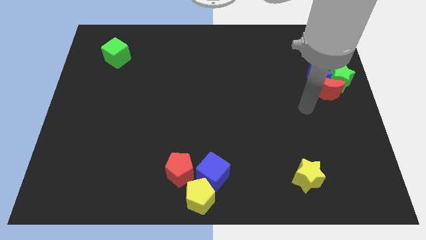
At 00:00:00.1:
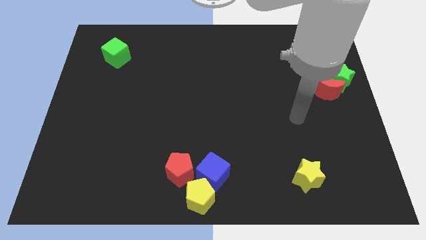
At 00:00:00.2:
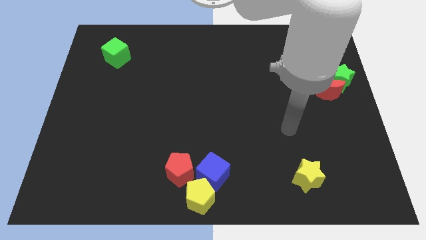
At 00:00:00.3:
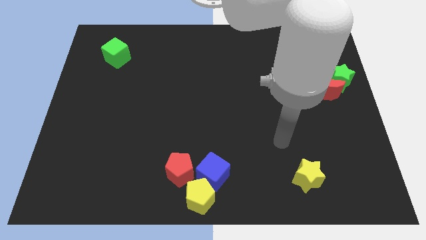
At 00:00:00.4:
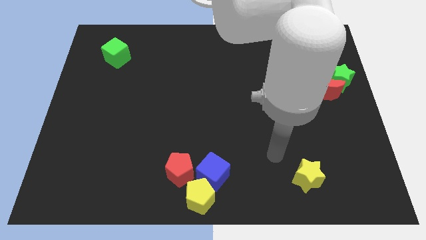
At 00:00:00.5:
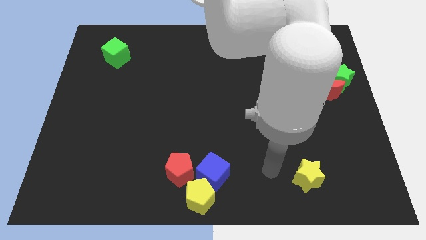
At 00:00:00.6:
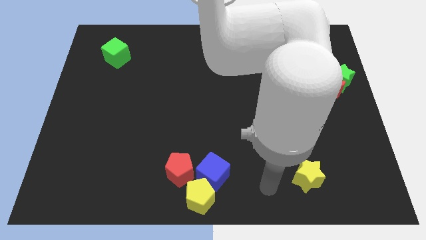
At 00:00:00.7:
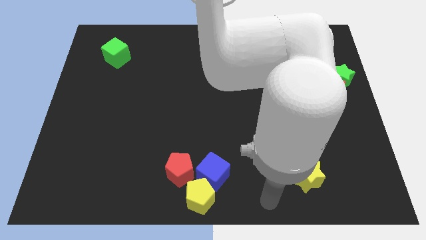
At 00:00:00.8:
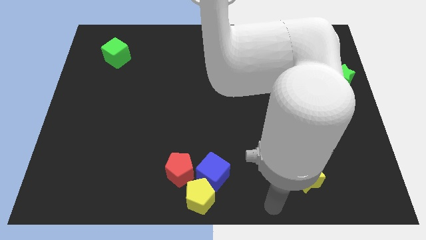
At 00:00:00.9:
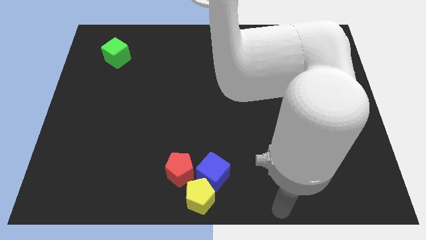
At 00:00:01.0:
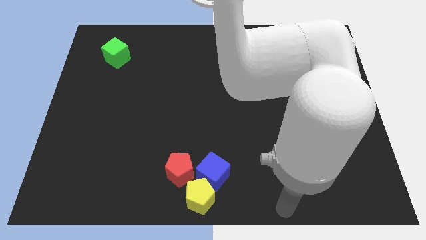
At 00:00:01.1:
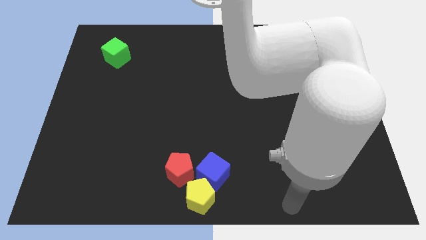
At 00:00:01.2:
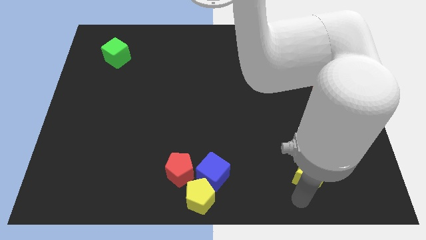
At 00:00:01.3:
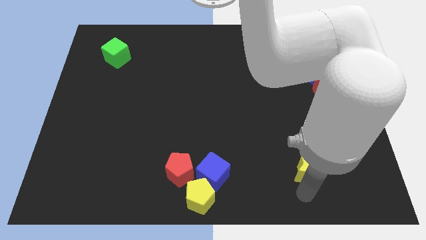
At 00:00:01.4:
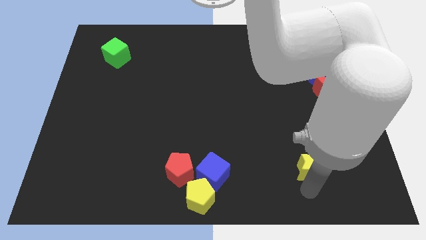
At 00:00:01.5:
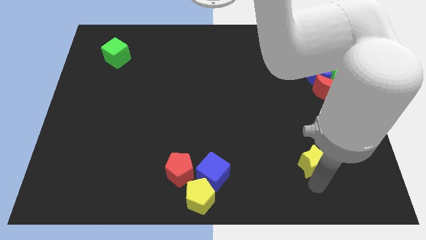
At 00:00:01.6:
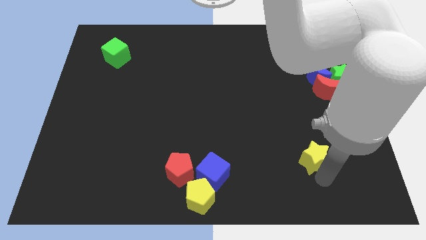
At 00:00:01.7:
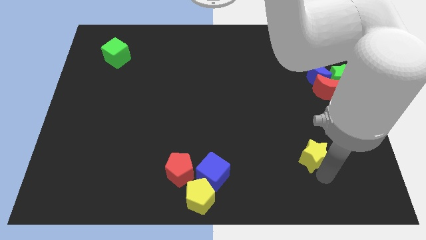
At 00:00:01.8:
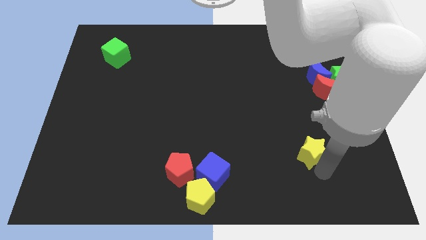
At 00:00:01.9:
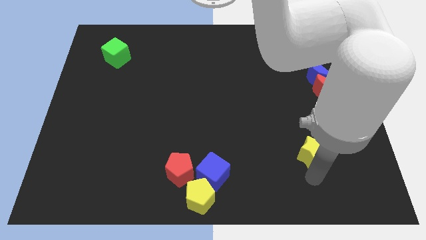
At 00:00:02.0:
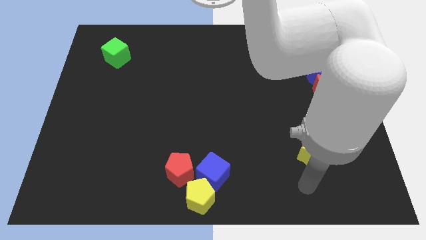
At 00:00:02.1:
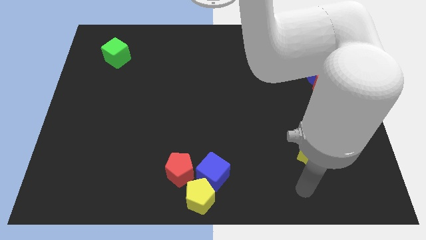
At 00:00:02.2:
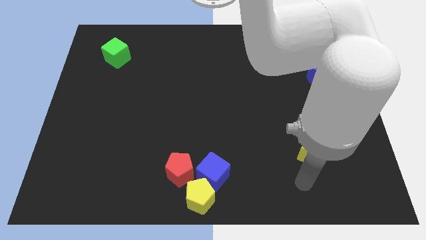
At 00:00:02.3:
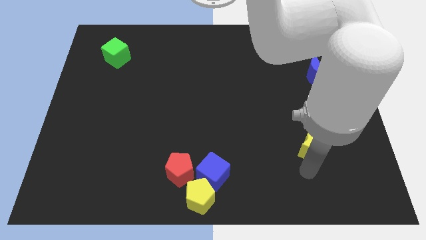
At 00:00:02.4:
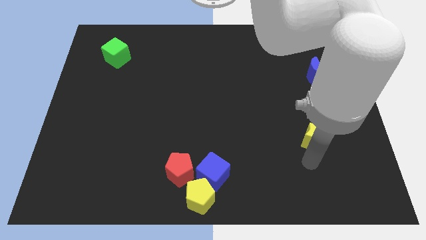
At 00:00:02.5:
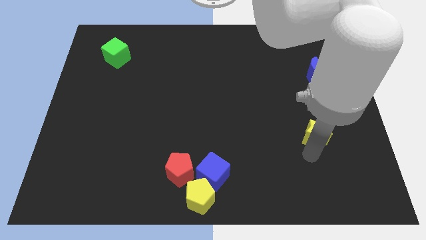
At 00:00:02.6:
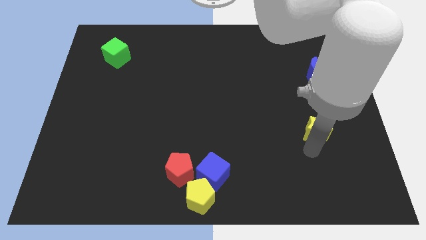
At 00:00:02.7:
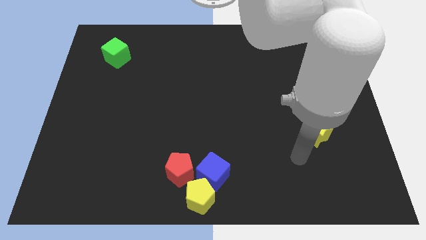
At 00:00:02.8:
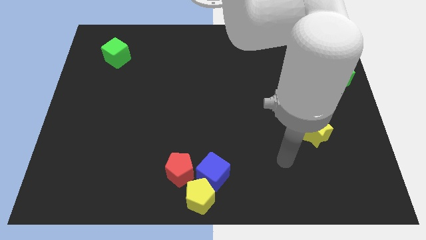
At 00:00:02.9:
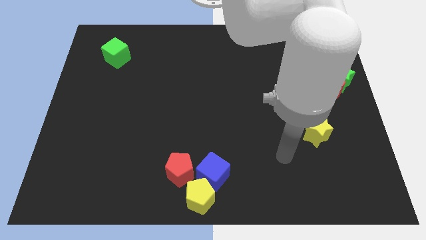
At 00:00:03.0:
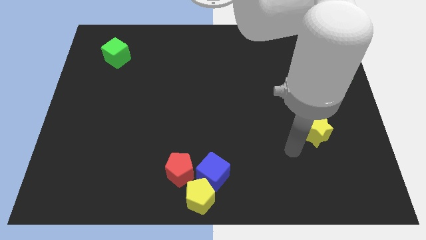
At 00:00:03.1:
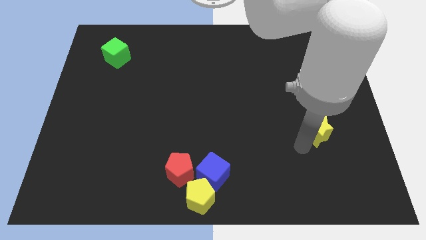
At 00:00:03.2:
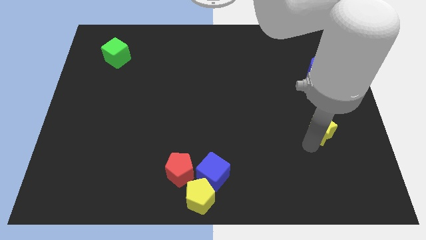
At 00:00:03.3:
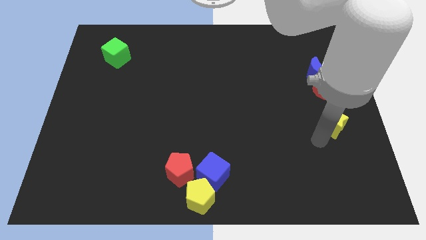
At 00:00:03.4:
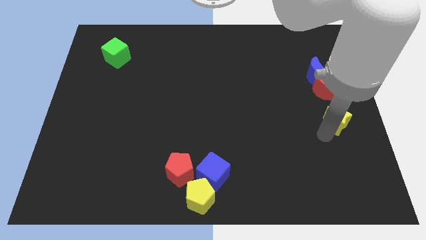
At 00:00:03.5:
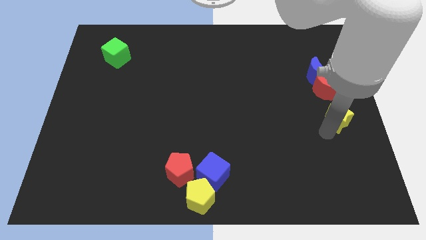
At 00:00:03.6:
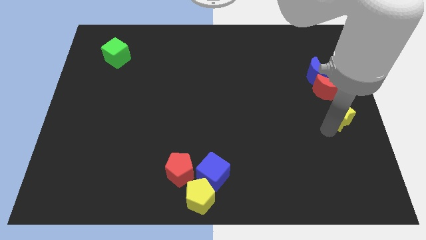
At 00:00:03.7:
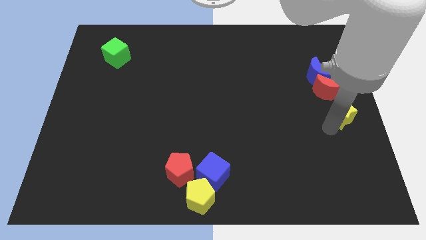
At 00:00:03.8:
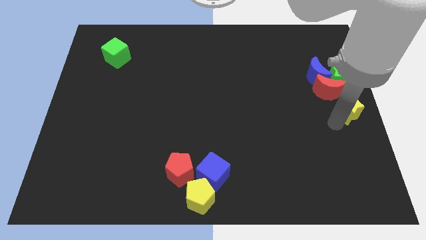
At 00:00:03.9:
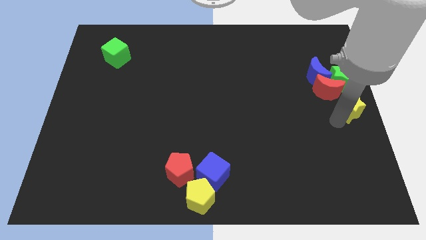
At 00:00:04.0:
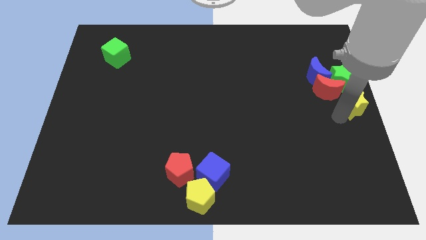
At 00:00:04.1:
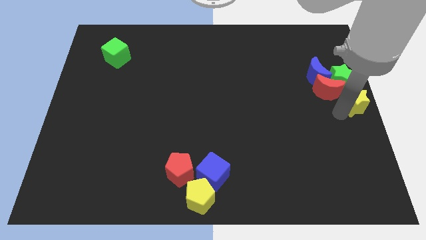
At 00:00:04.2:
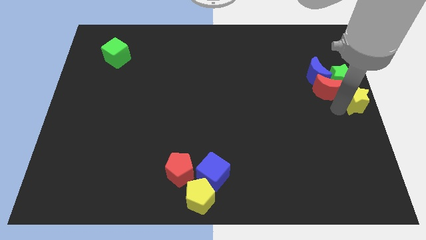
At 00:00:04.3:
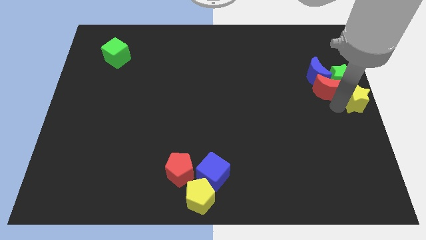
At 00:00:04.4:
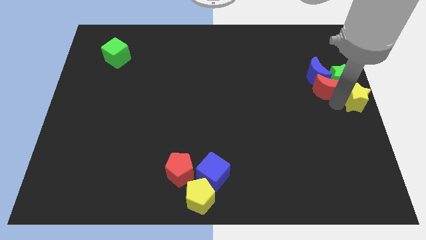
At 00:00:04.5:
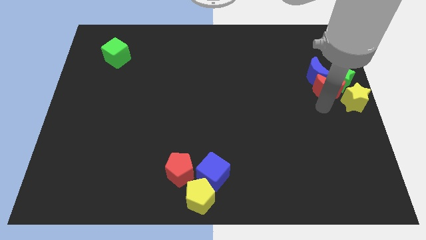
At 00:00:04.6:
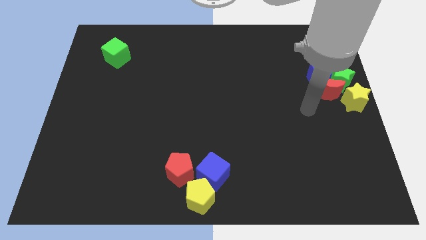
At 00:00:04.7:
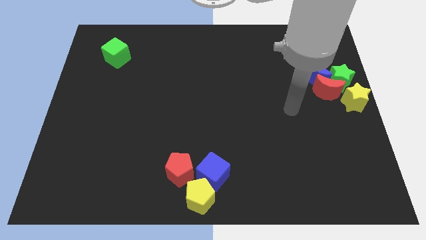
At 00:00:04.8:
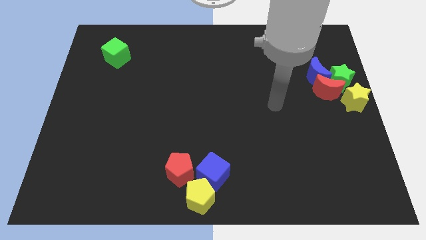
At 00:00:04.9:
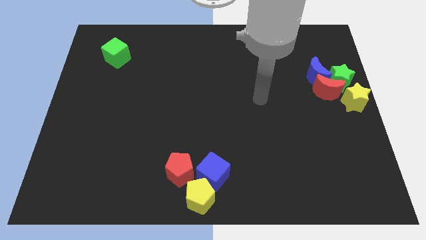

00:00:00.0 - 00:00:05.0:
place the yellow star below the green star

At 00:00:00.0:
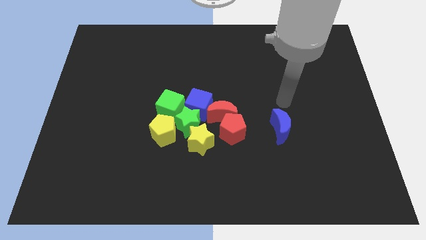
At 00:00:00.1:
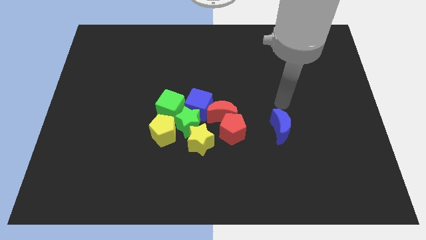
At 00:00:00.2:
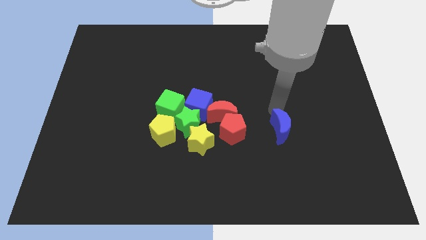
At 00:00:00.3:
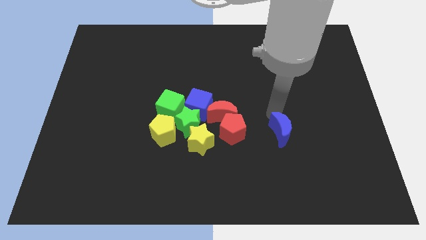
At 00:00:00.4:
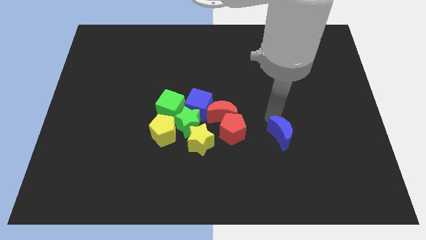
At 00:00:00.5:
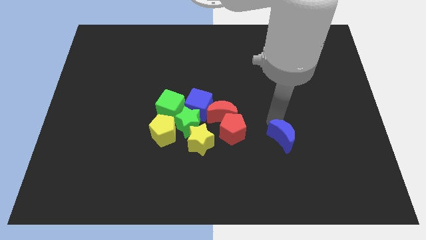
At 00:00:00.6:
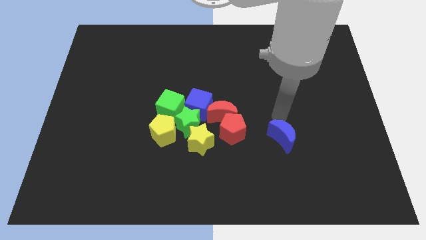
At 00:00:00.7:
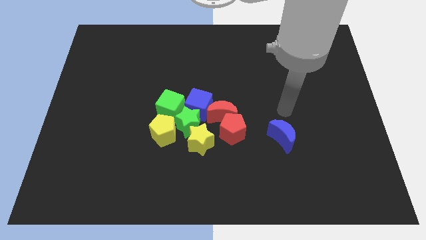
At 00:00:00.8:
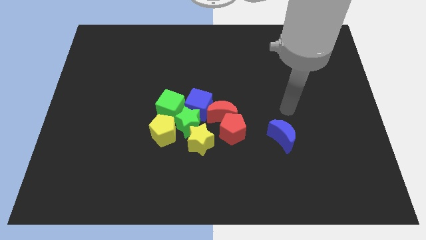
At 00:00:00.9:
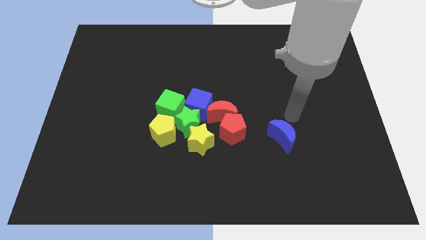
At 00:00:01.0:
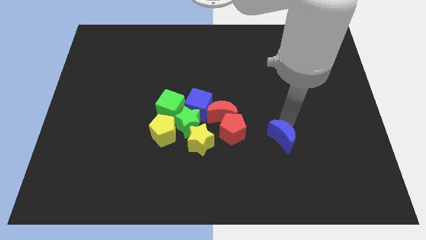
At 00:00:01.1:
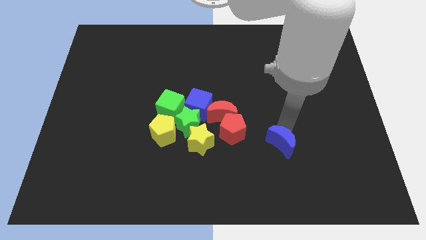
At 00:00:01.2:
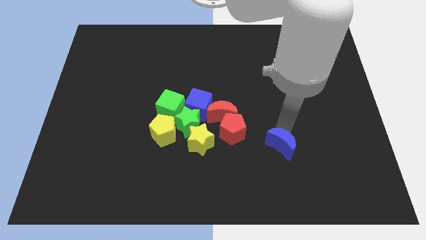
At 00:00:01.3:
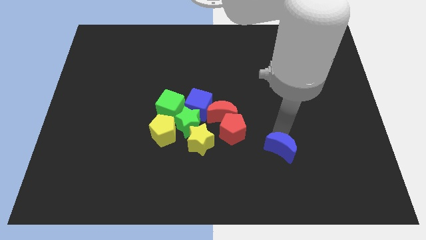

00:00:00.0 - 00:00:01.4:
push the blue crescent to the bottom of the board

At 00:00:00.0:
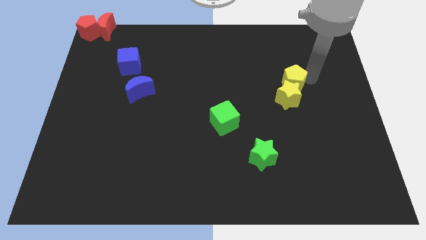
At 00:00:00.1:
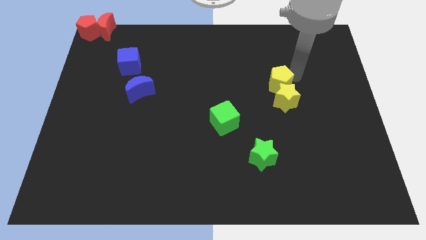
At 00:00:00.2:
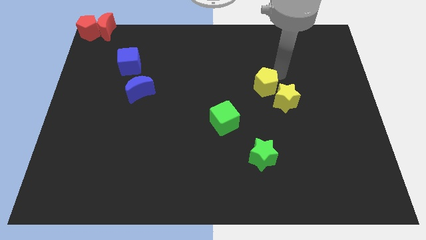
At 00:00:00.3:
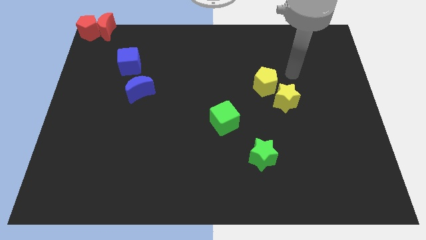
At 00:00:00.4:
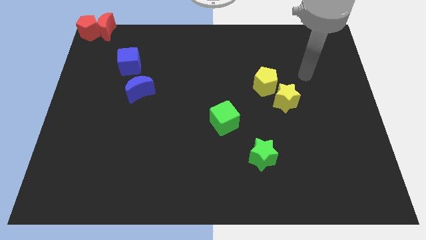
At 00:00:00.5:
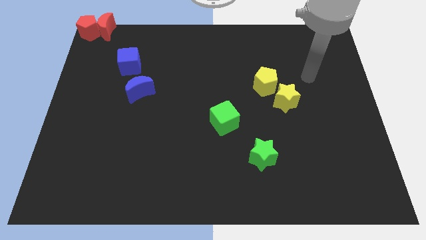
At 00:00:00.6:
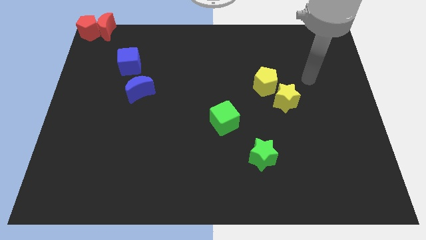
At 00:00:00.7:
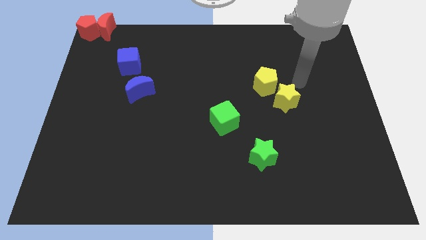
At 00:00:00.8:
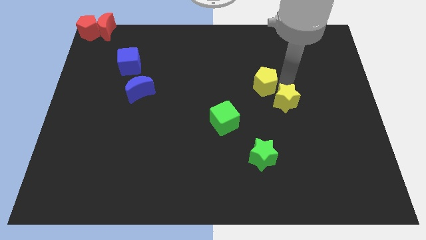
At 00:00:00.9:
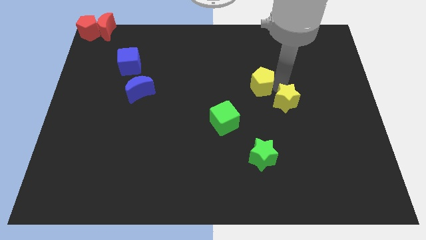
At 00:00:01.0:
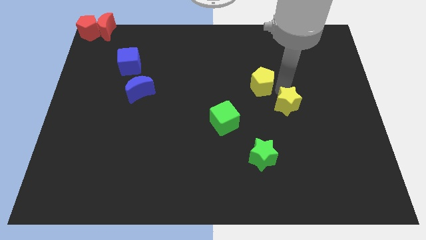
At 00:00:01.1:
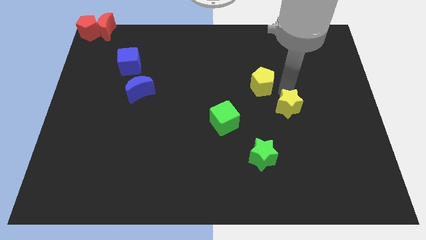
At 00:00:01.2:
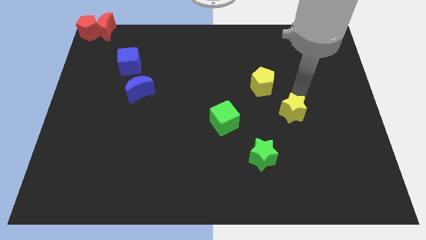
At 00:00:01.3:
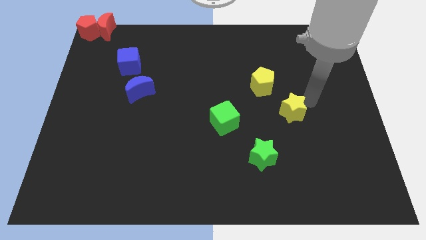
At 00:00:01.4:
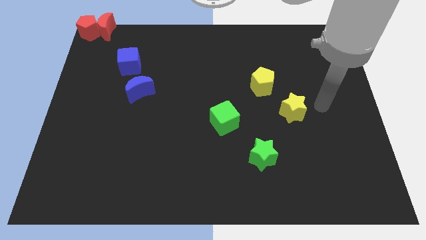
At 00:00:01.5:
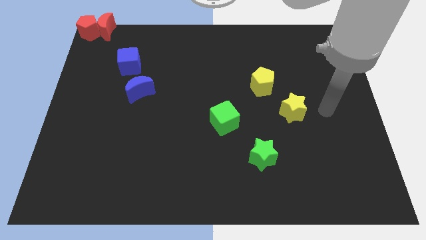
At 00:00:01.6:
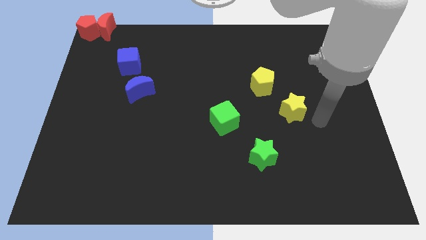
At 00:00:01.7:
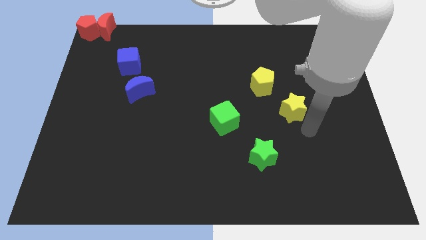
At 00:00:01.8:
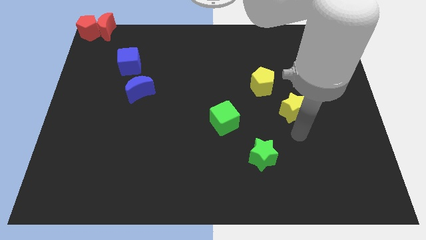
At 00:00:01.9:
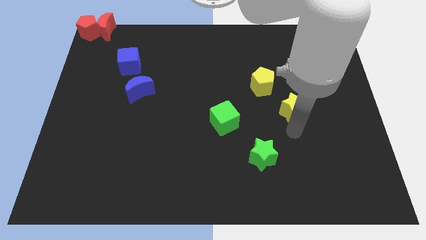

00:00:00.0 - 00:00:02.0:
separate the yellow pair of blocks from each other

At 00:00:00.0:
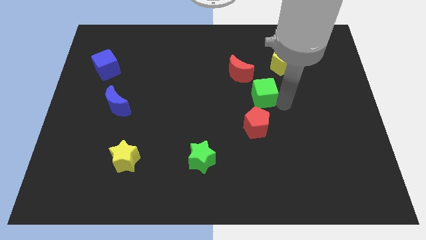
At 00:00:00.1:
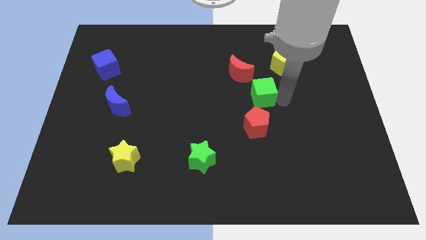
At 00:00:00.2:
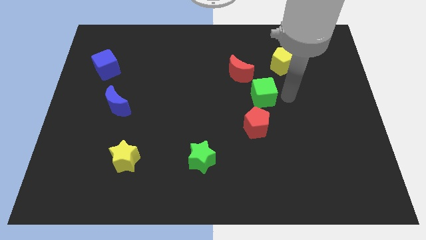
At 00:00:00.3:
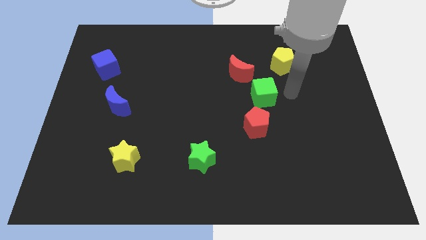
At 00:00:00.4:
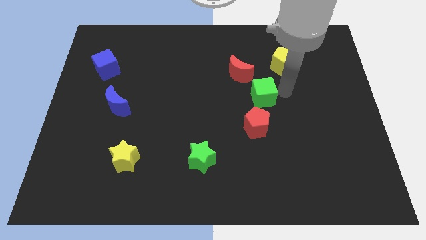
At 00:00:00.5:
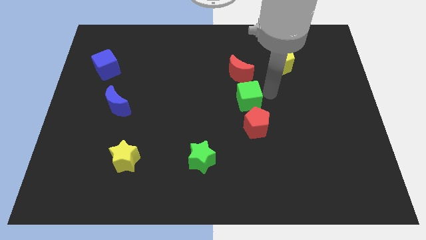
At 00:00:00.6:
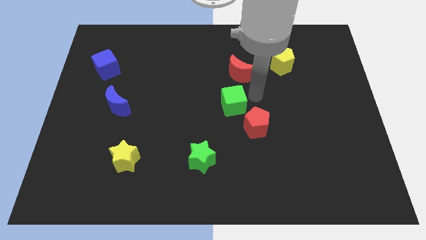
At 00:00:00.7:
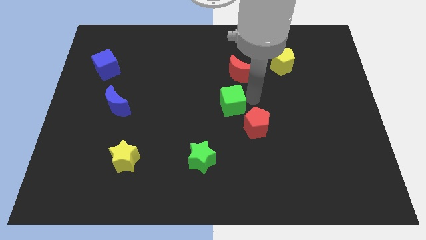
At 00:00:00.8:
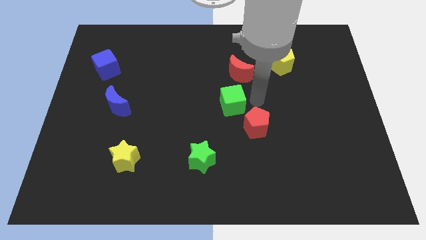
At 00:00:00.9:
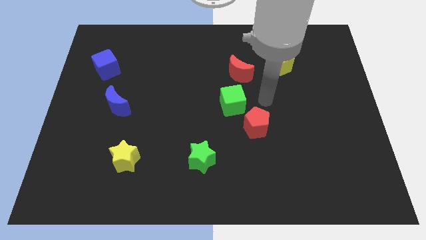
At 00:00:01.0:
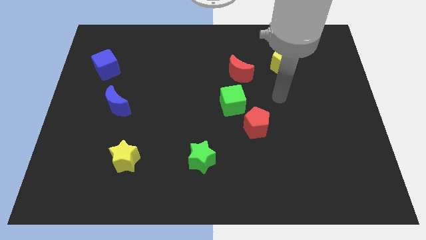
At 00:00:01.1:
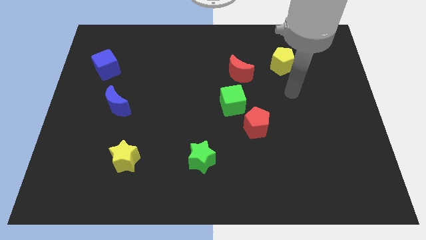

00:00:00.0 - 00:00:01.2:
move the green cube to the center of the board
